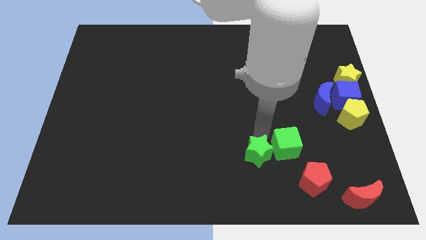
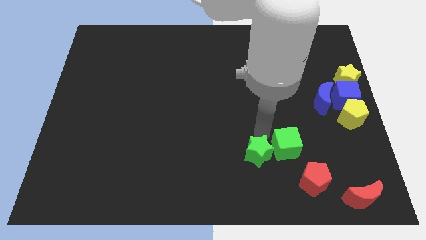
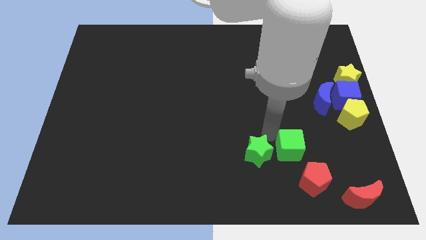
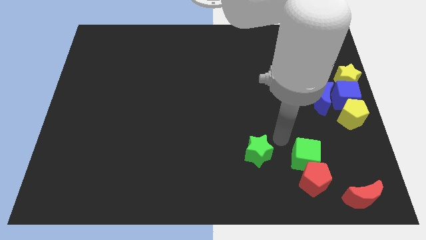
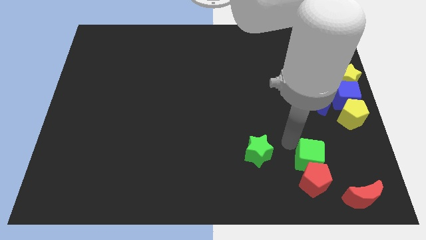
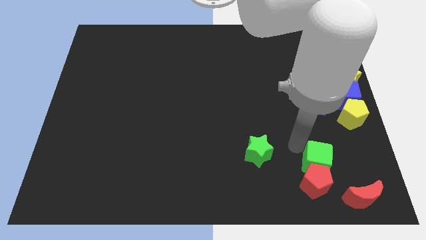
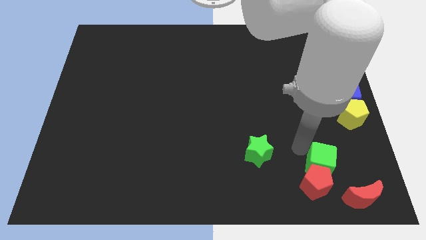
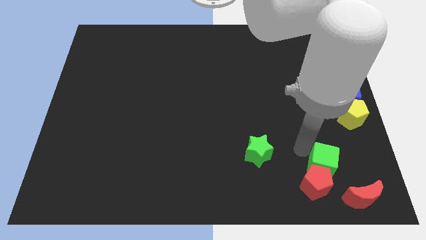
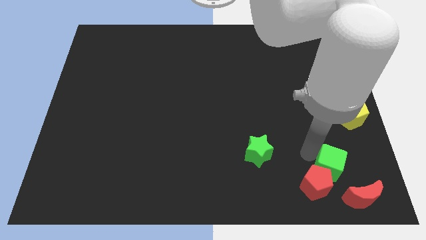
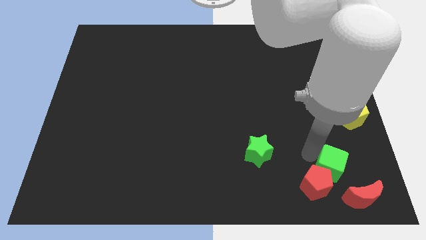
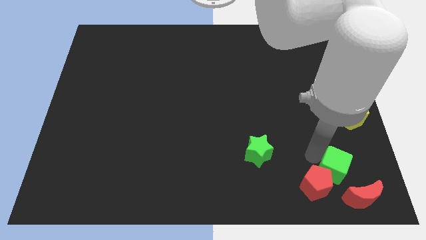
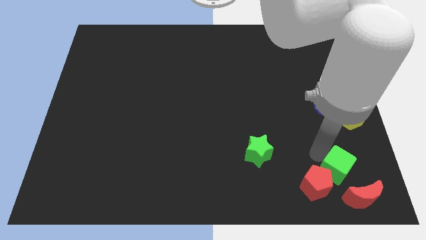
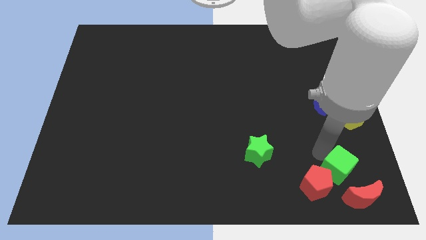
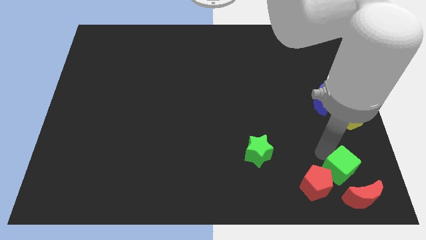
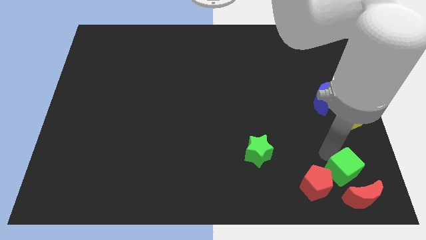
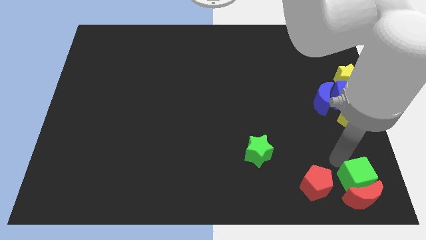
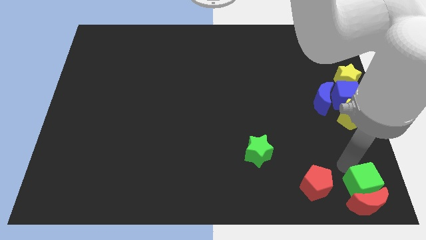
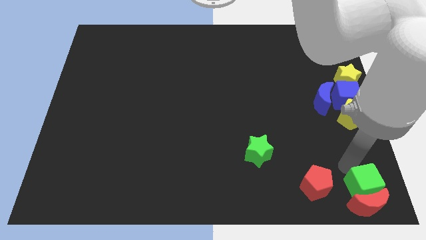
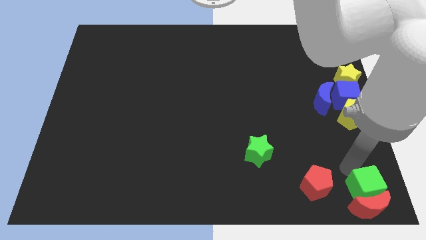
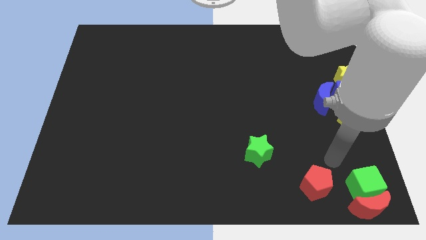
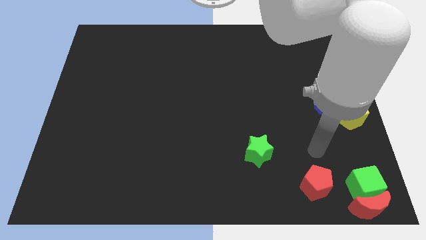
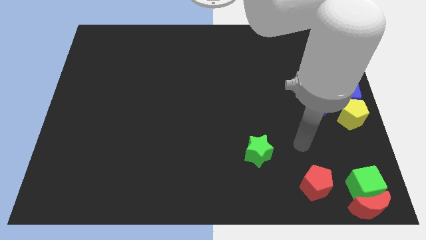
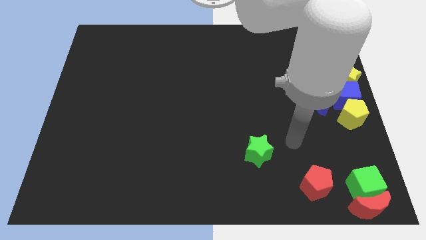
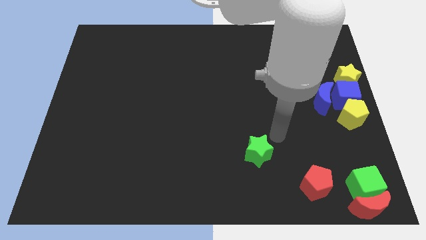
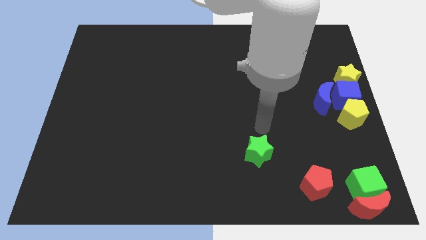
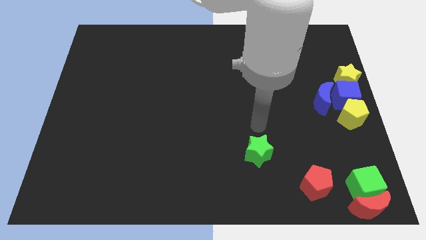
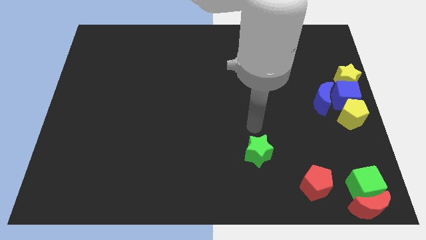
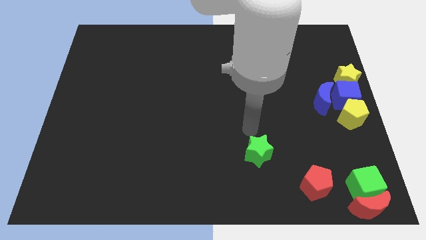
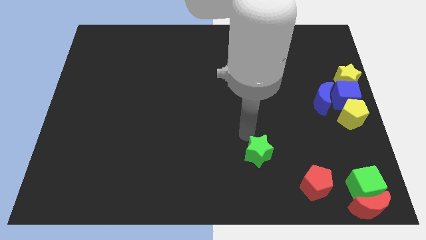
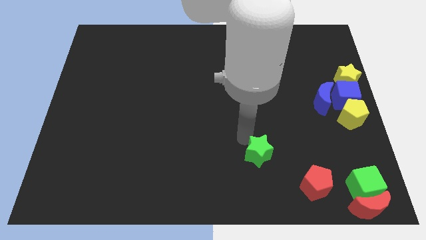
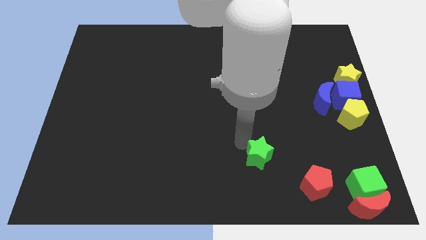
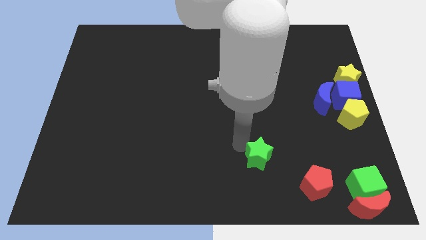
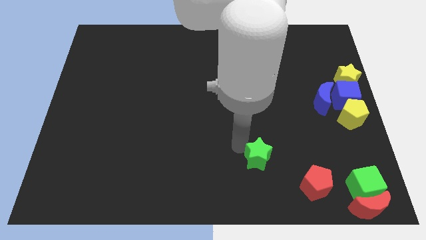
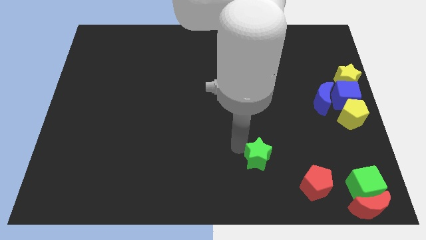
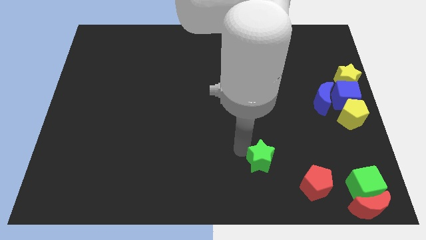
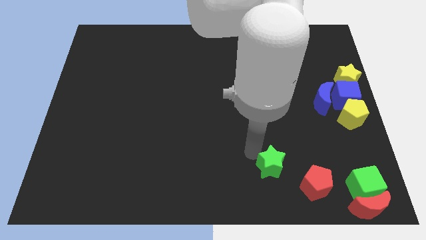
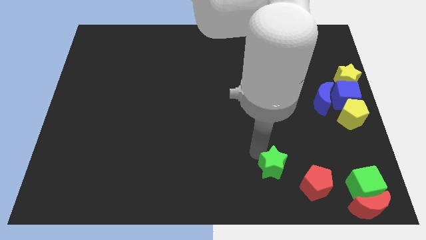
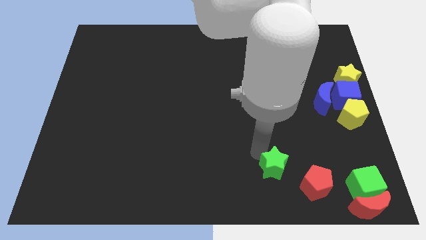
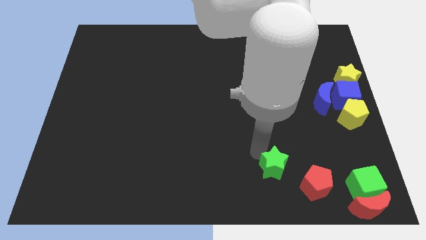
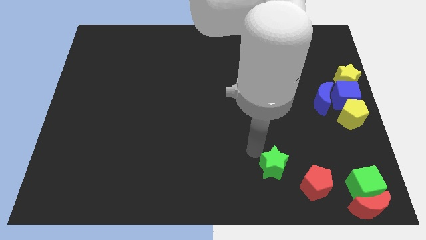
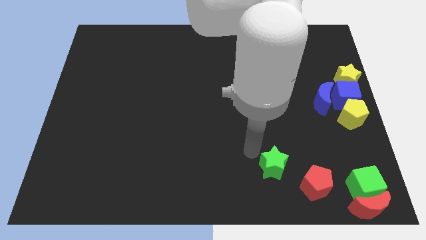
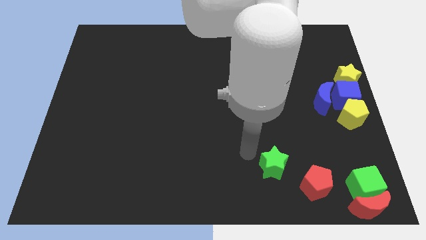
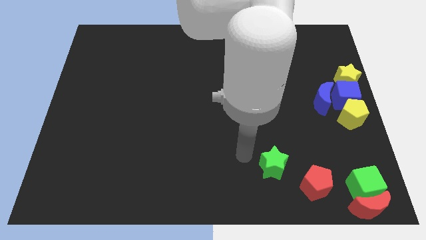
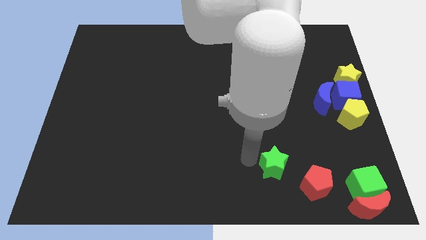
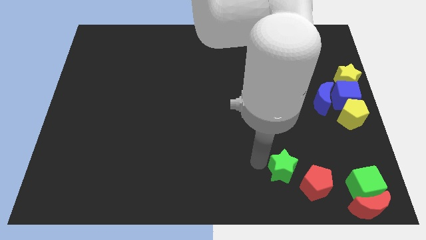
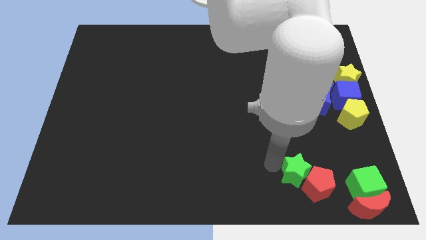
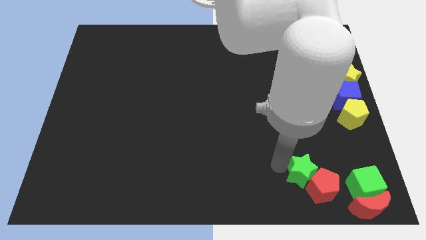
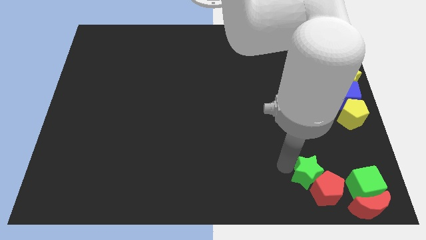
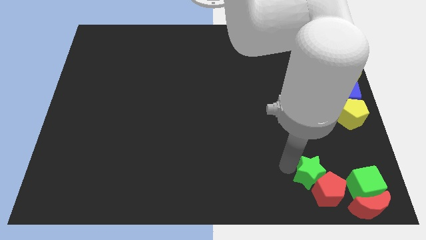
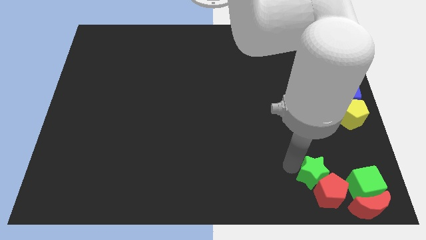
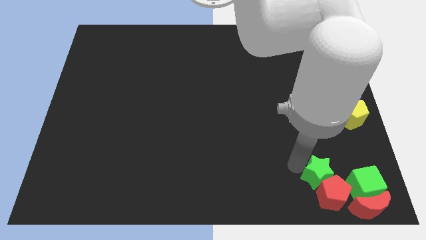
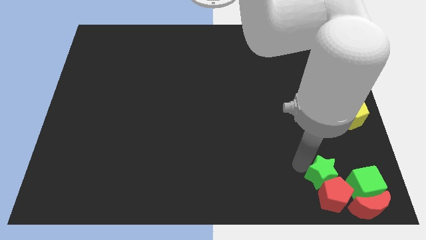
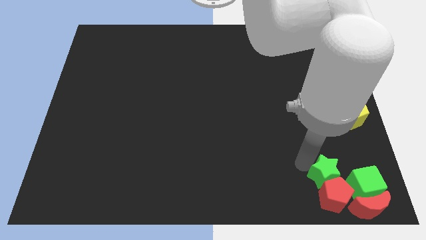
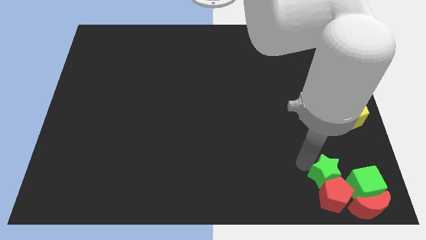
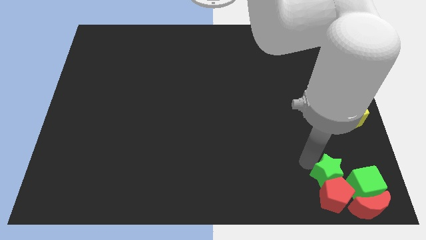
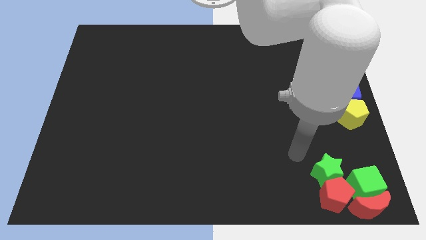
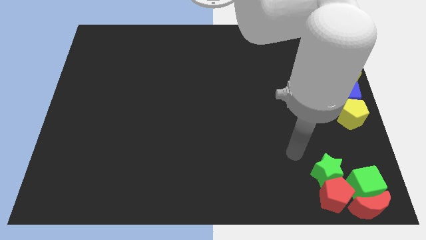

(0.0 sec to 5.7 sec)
group up the red and green blocks together at the bottom right corner of the board

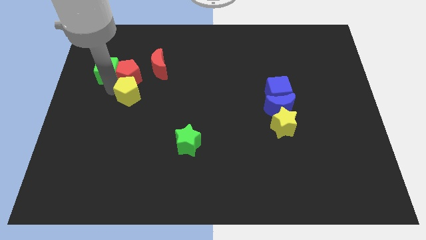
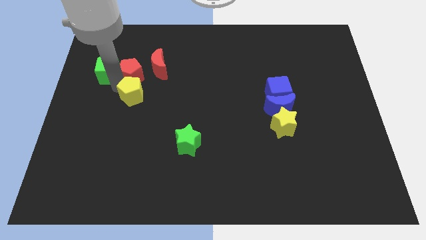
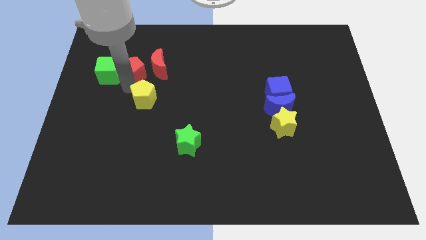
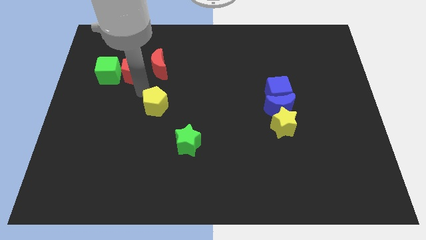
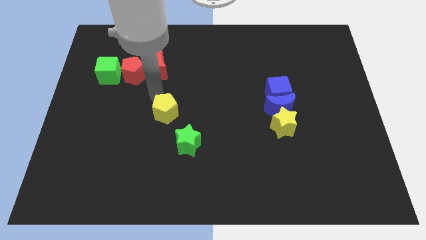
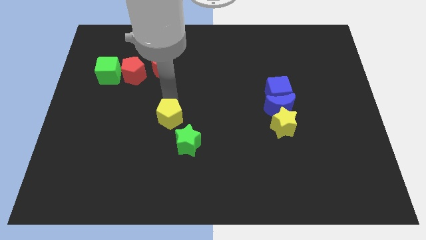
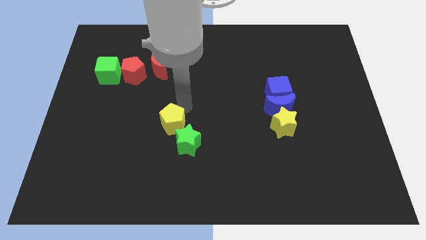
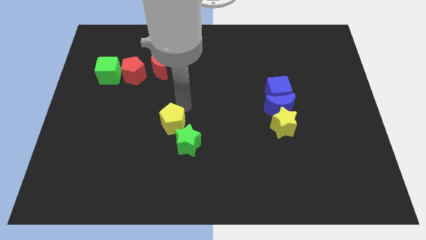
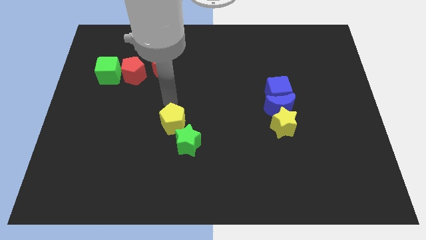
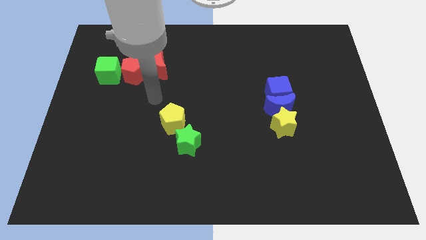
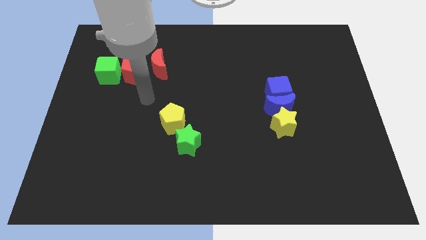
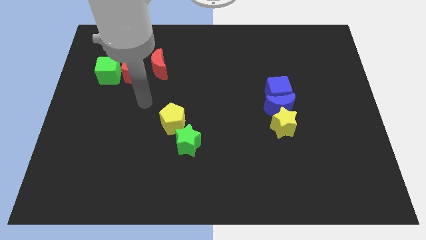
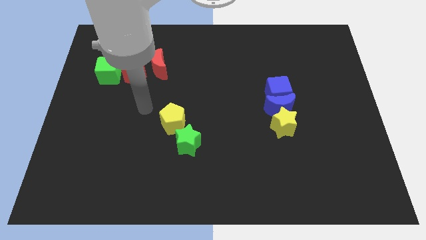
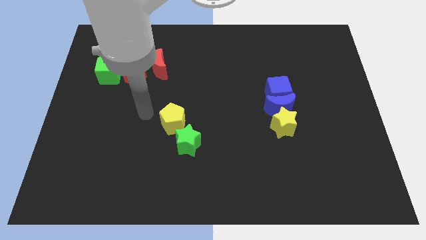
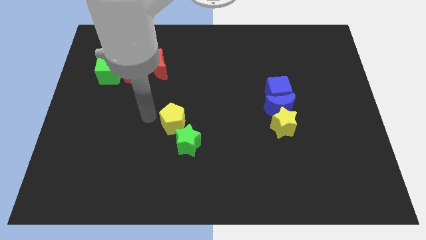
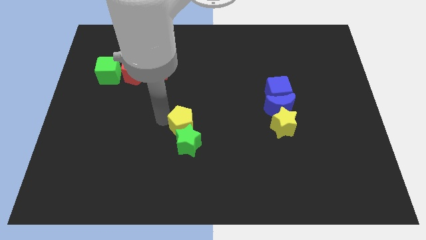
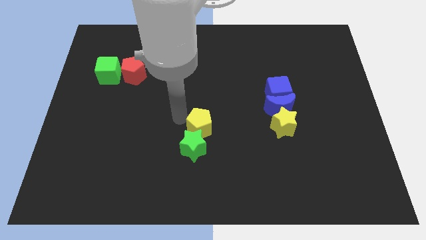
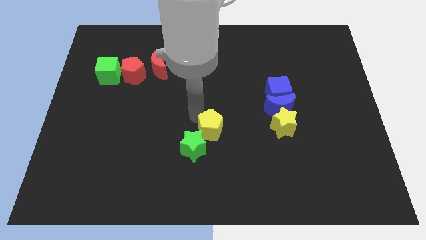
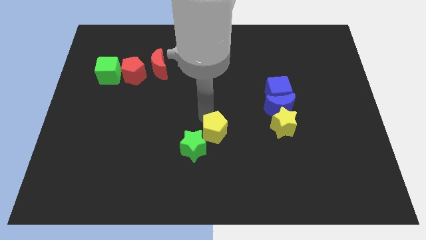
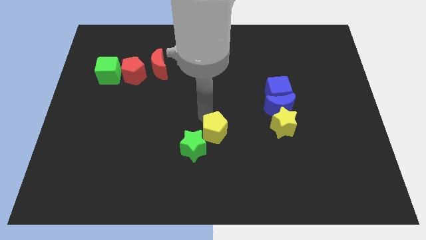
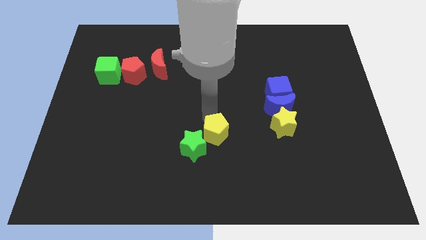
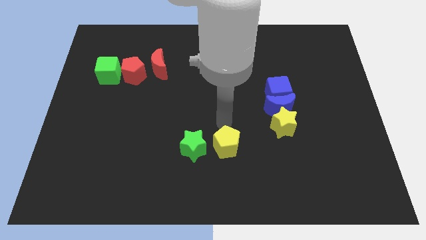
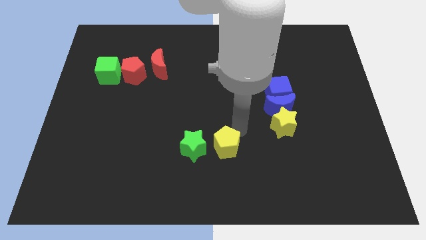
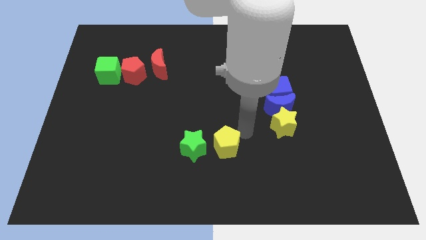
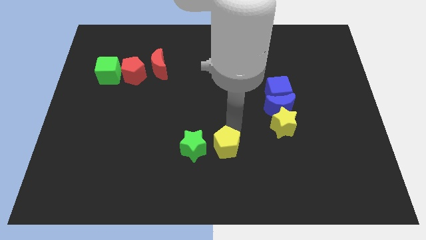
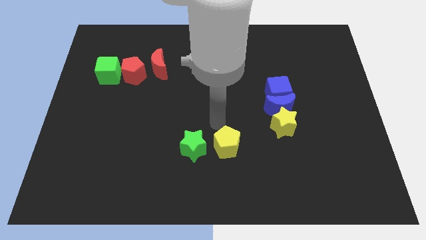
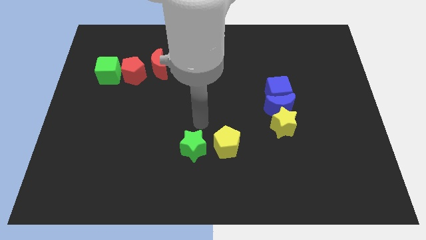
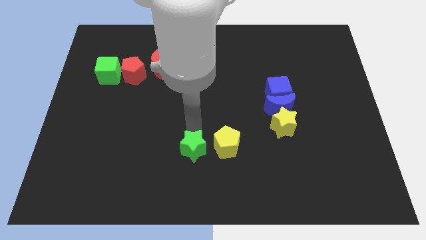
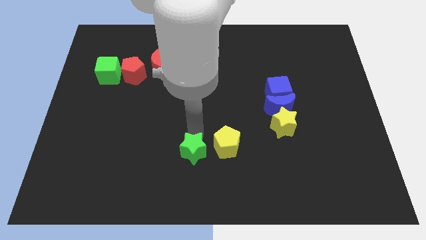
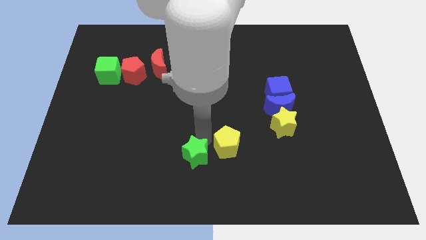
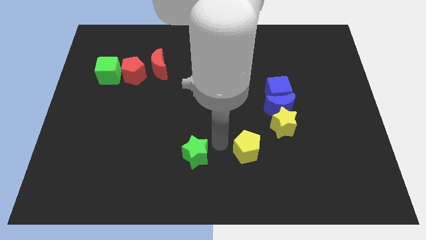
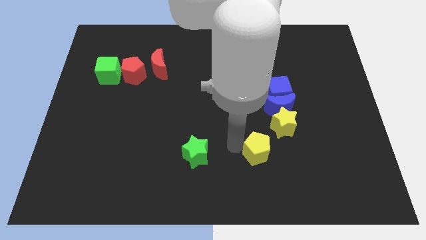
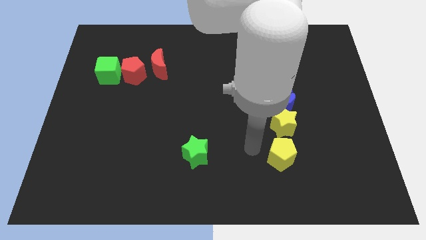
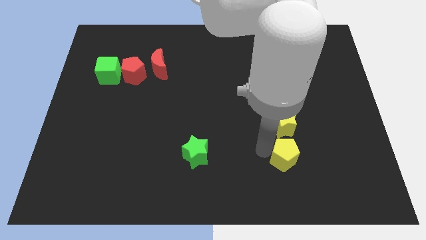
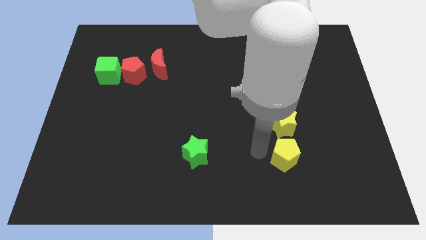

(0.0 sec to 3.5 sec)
slide the yellow pentagon vertically below the yellow star
